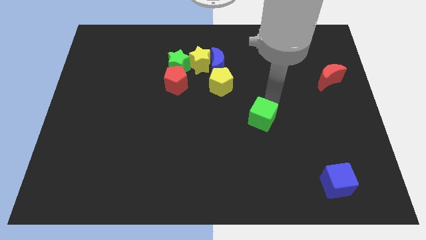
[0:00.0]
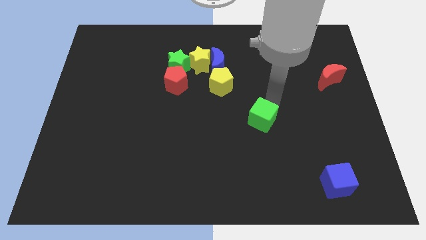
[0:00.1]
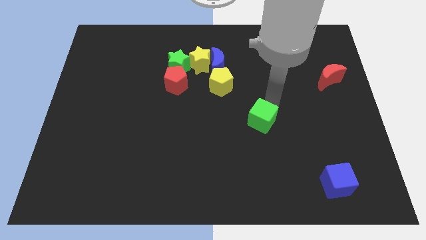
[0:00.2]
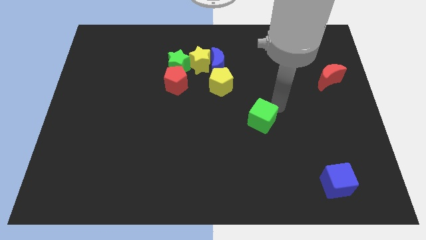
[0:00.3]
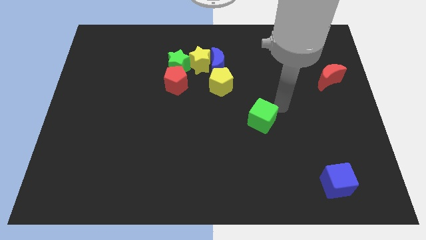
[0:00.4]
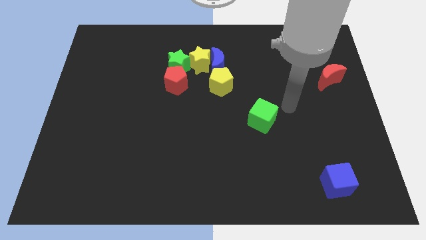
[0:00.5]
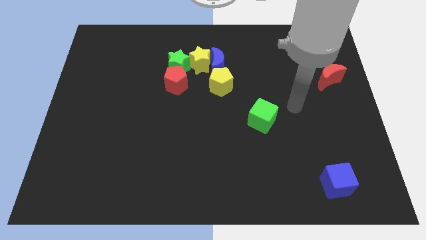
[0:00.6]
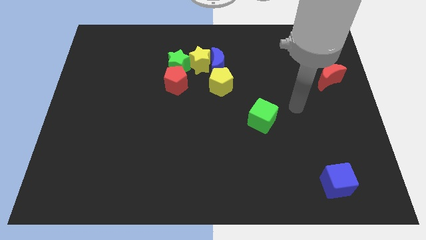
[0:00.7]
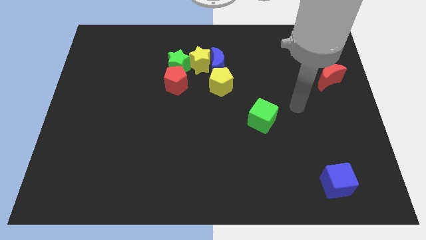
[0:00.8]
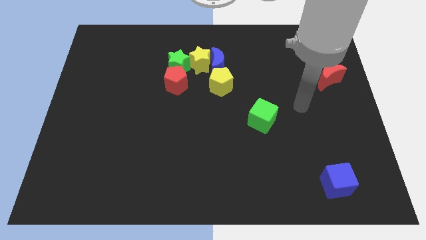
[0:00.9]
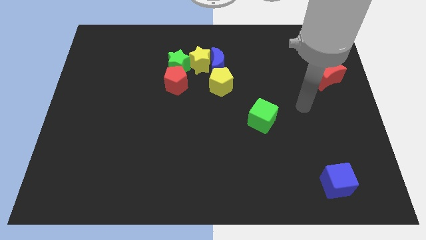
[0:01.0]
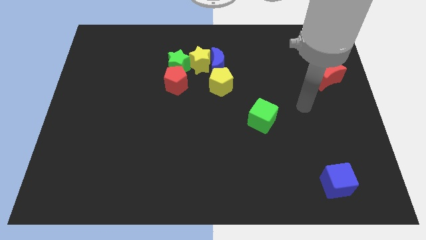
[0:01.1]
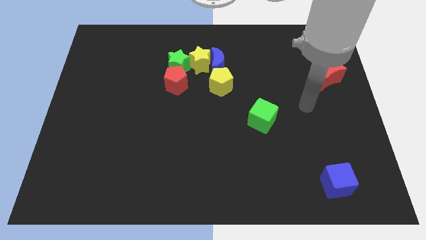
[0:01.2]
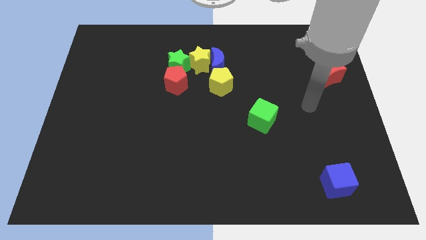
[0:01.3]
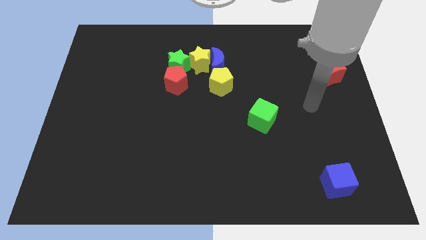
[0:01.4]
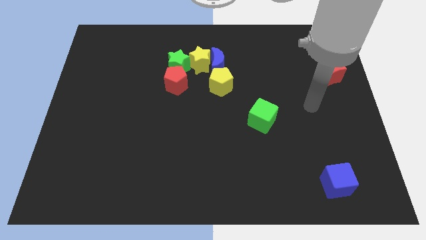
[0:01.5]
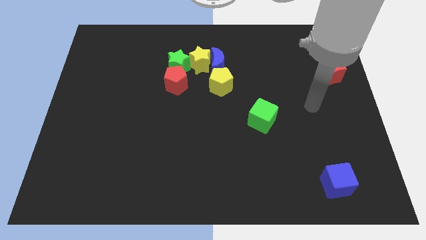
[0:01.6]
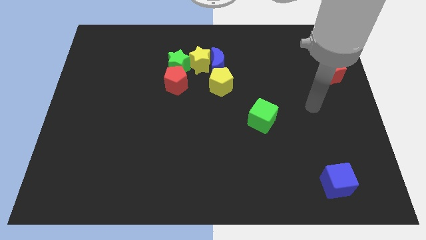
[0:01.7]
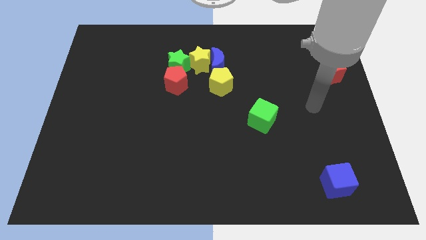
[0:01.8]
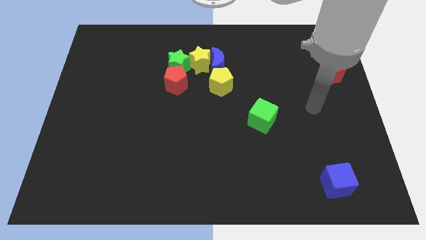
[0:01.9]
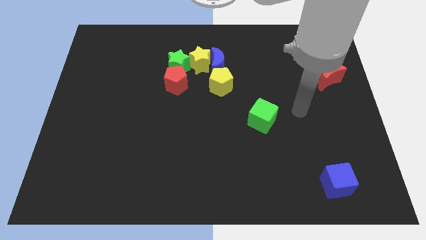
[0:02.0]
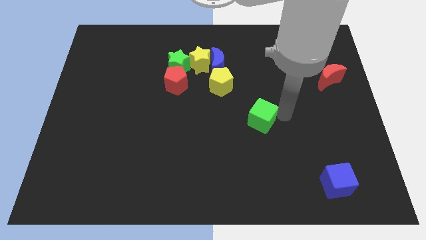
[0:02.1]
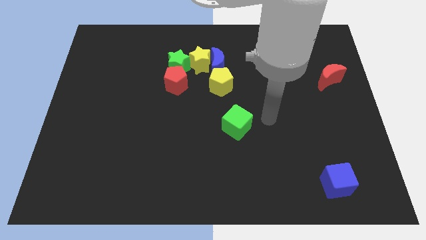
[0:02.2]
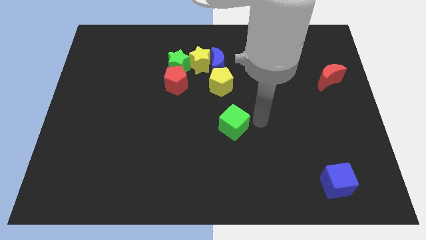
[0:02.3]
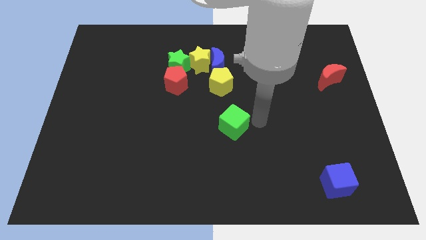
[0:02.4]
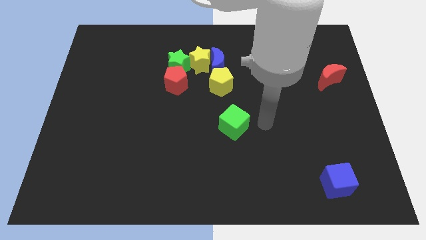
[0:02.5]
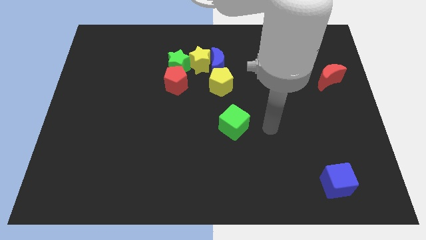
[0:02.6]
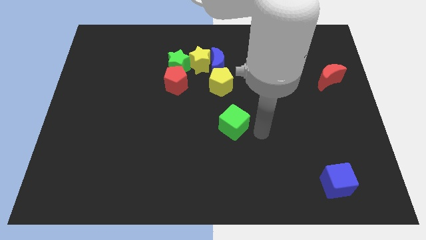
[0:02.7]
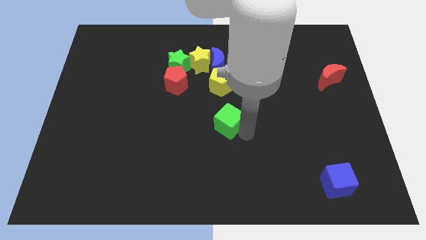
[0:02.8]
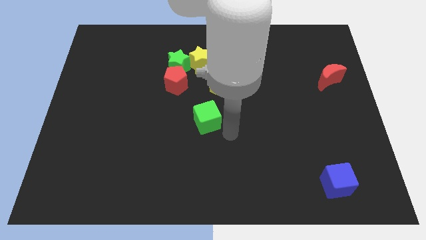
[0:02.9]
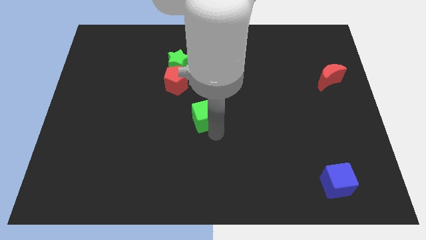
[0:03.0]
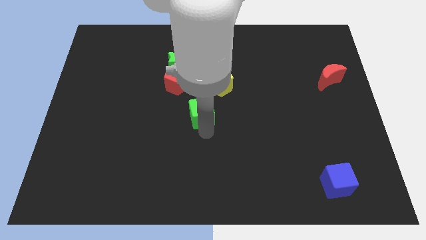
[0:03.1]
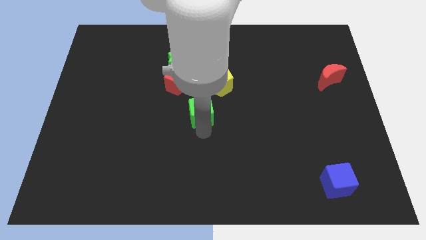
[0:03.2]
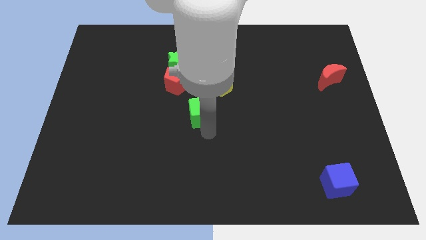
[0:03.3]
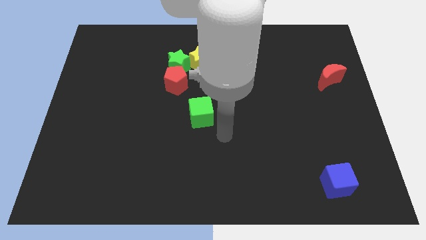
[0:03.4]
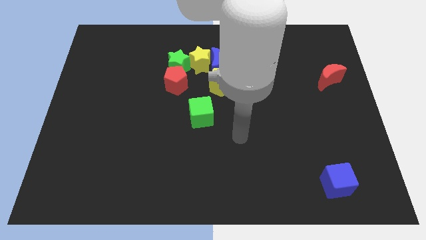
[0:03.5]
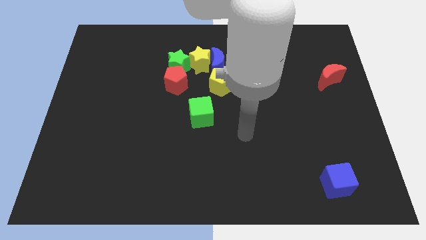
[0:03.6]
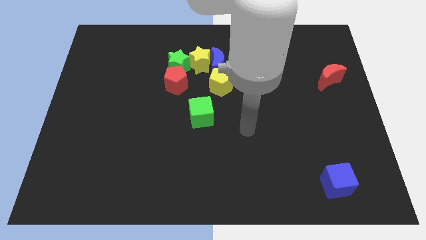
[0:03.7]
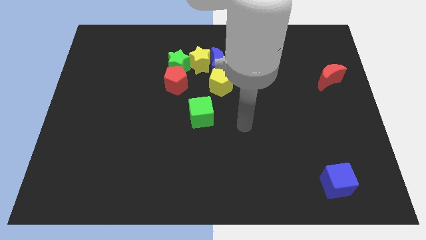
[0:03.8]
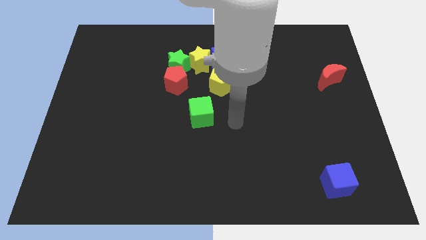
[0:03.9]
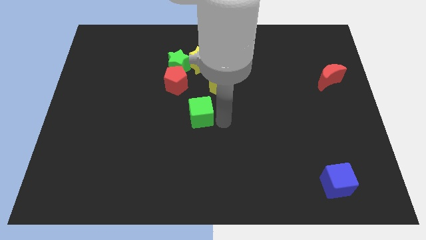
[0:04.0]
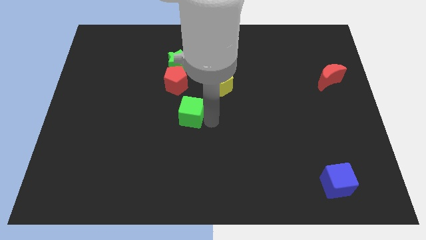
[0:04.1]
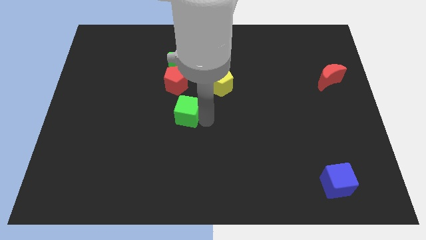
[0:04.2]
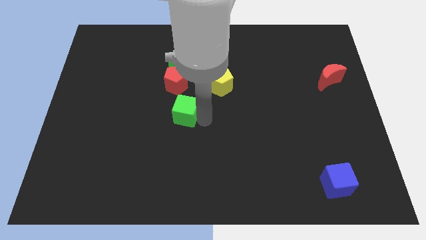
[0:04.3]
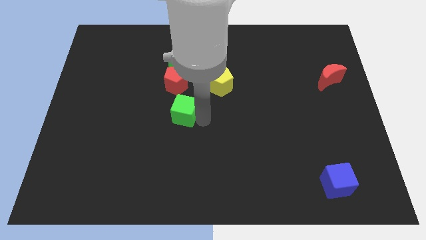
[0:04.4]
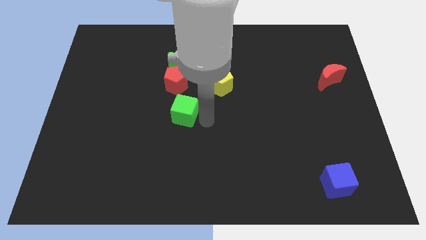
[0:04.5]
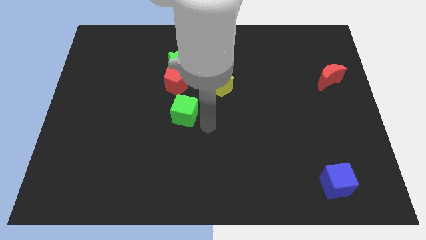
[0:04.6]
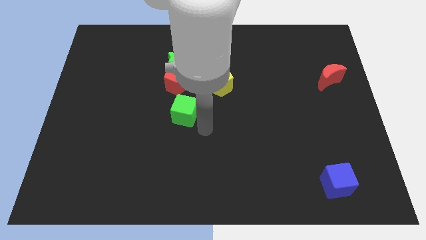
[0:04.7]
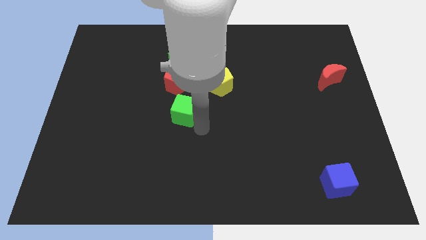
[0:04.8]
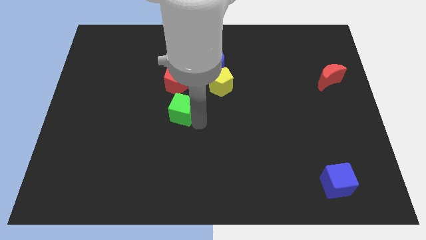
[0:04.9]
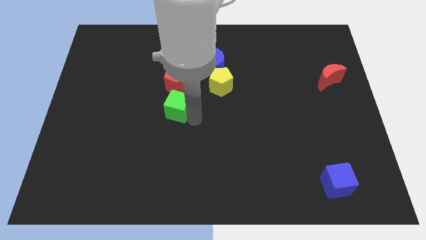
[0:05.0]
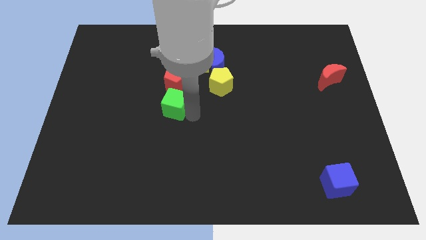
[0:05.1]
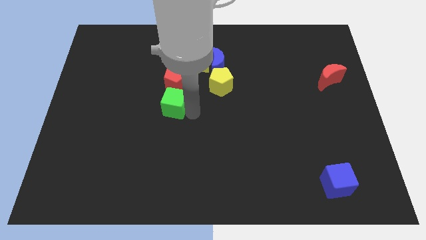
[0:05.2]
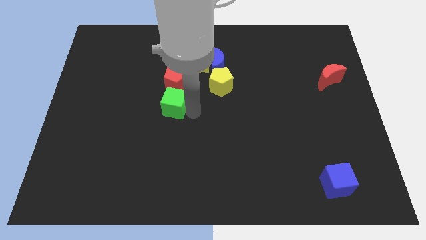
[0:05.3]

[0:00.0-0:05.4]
place the green cube down to the red pentagon

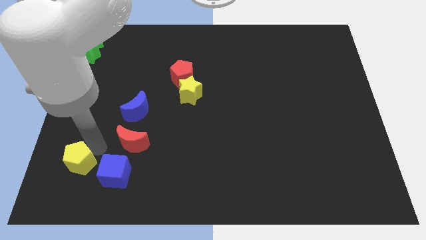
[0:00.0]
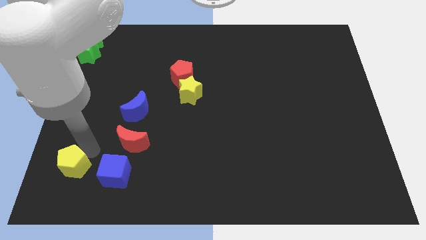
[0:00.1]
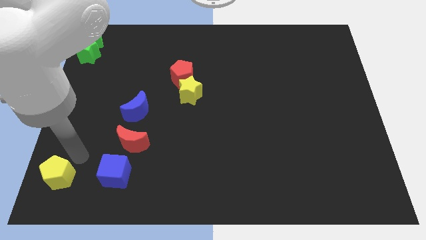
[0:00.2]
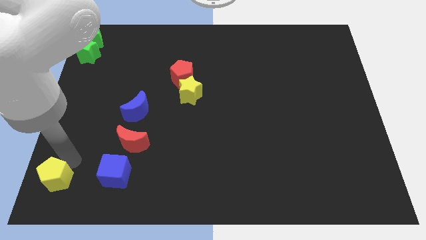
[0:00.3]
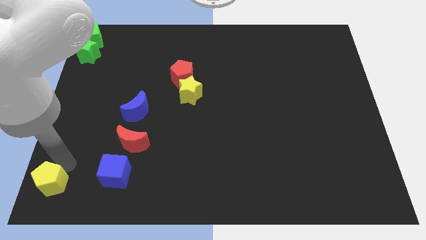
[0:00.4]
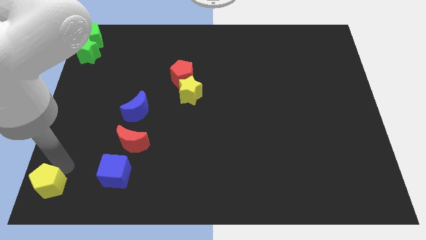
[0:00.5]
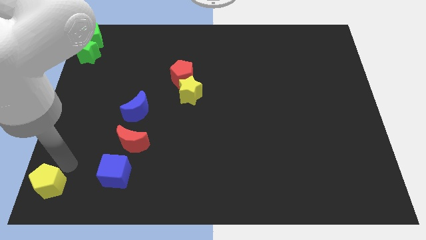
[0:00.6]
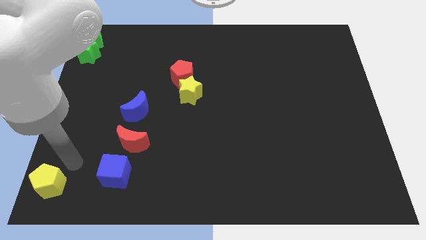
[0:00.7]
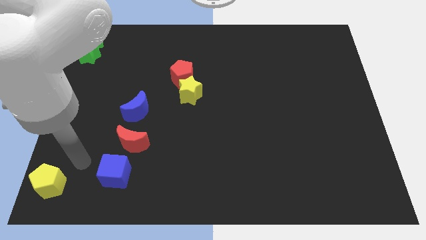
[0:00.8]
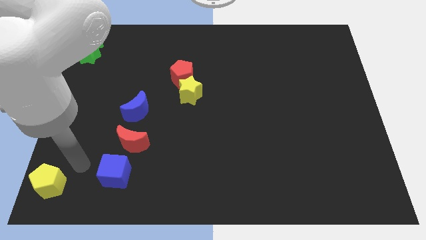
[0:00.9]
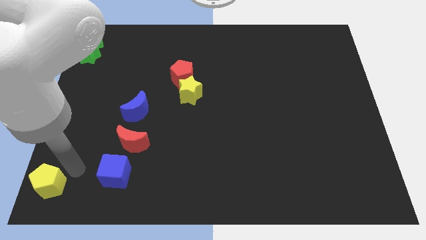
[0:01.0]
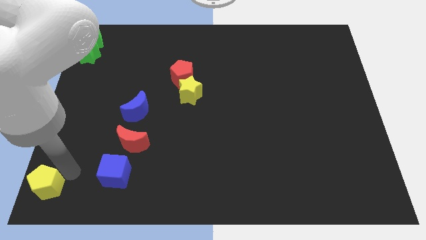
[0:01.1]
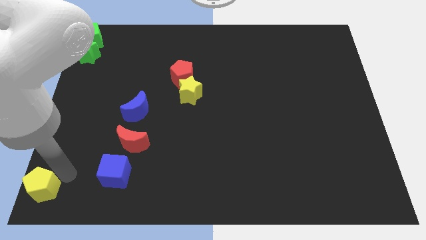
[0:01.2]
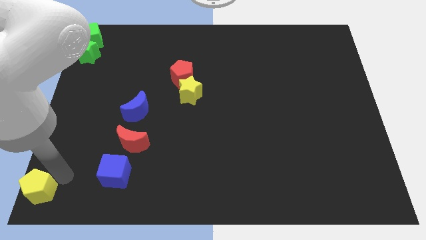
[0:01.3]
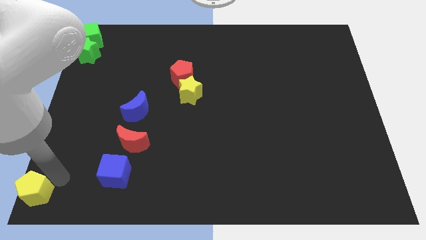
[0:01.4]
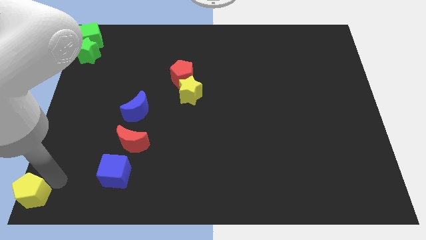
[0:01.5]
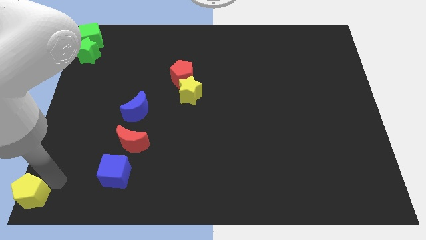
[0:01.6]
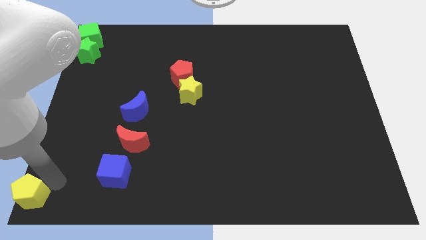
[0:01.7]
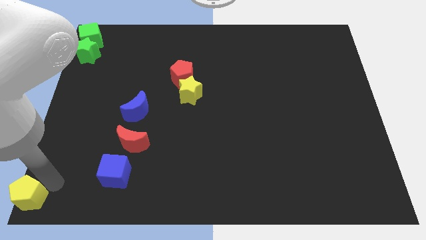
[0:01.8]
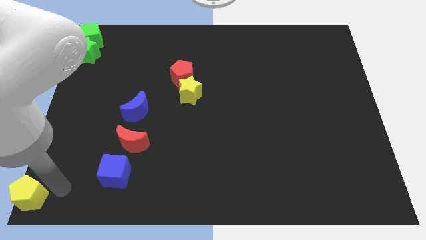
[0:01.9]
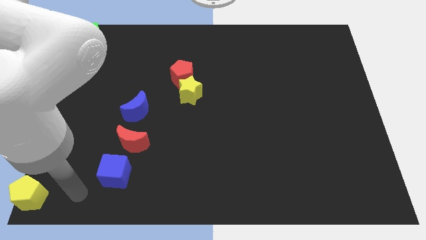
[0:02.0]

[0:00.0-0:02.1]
place the yellow pentagon at the bottom left

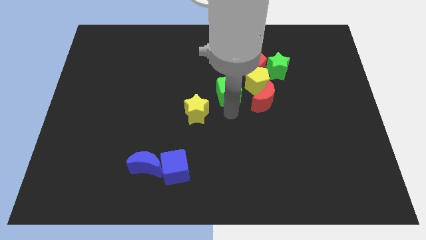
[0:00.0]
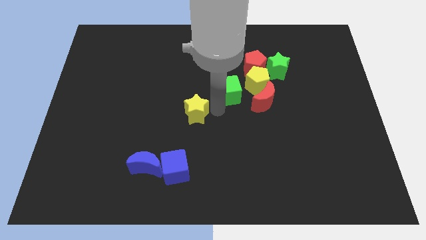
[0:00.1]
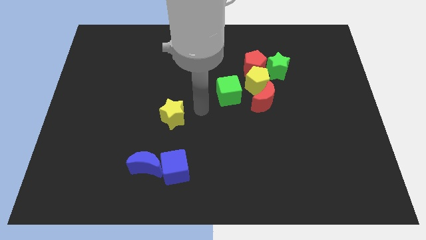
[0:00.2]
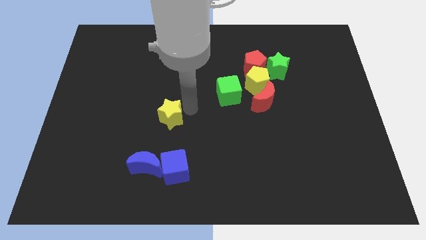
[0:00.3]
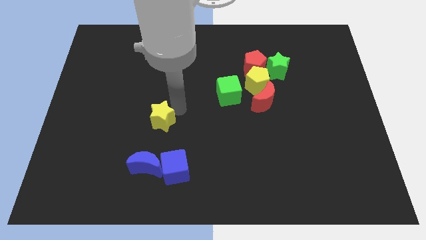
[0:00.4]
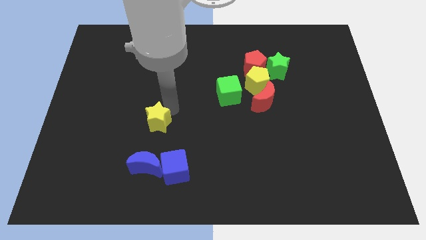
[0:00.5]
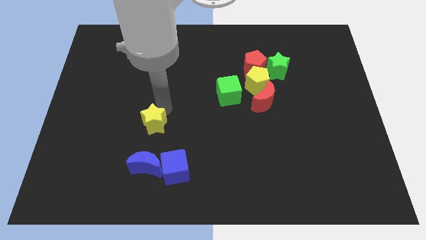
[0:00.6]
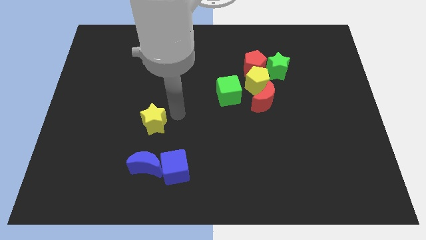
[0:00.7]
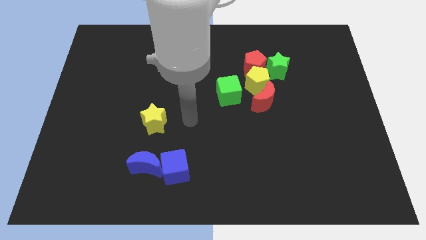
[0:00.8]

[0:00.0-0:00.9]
move the yellow star above the blue crescent

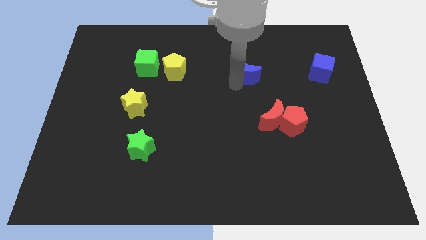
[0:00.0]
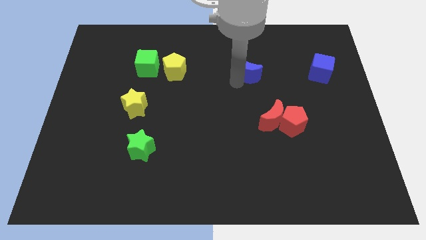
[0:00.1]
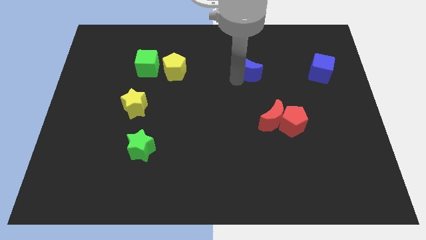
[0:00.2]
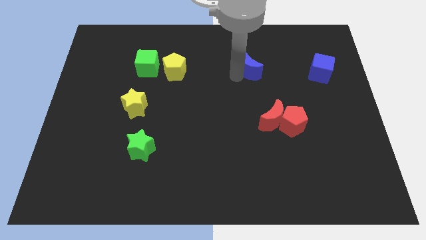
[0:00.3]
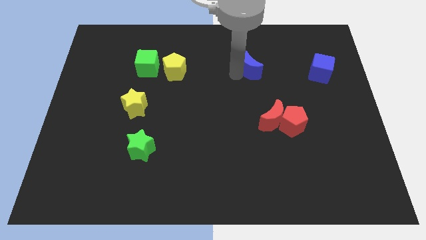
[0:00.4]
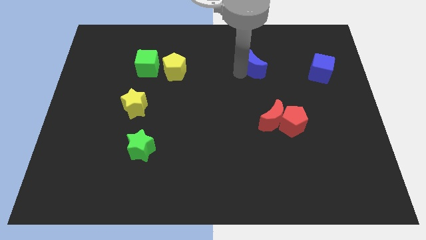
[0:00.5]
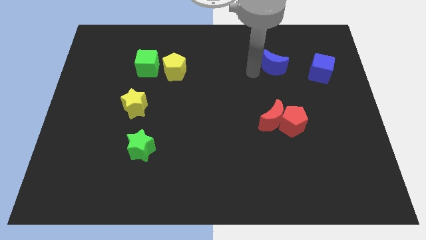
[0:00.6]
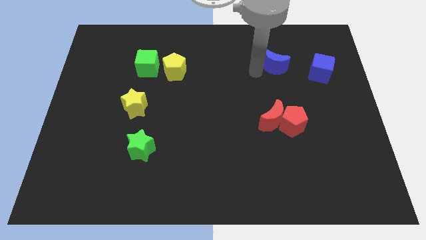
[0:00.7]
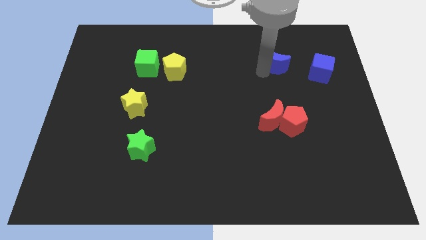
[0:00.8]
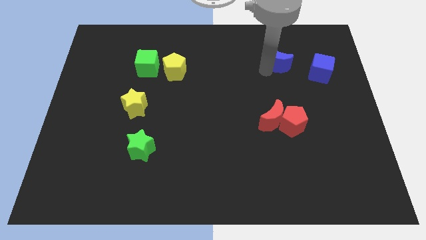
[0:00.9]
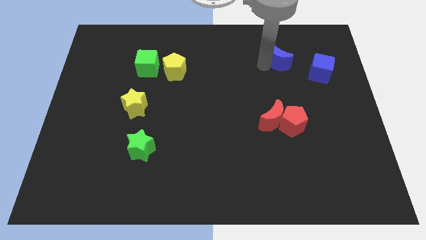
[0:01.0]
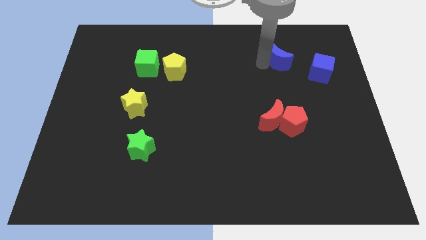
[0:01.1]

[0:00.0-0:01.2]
push the blue crescent parallel to blue cube
